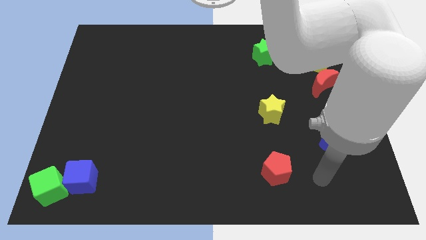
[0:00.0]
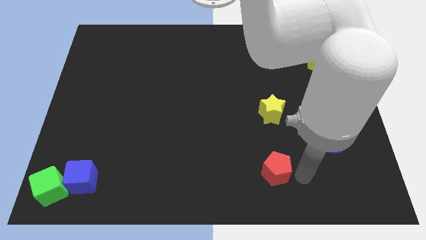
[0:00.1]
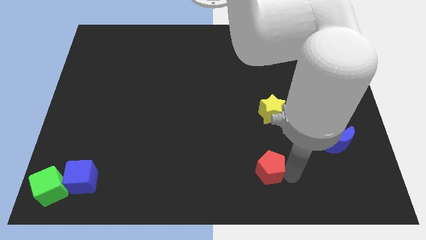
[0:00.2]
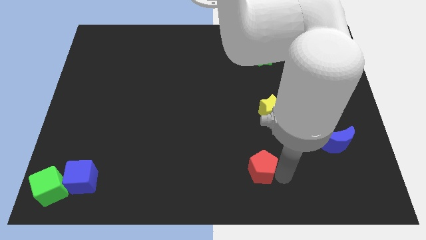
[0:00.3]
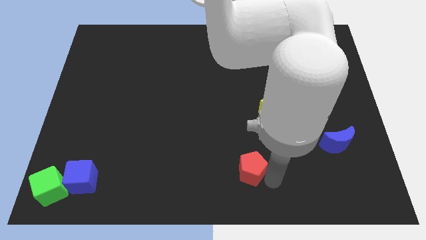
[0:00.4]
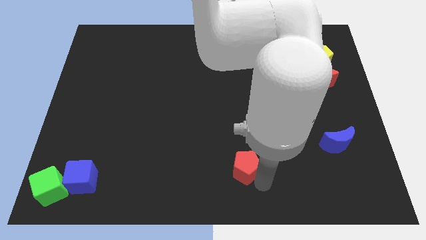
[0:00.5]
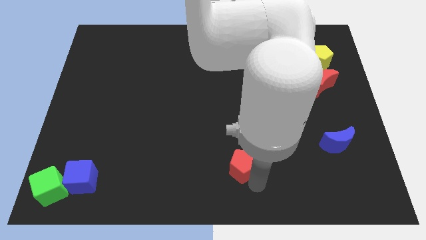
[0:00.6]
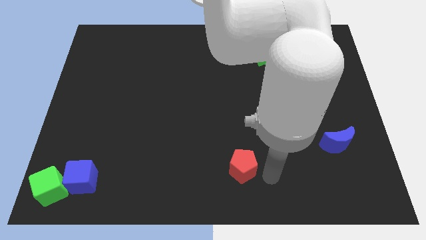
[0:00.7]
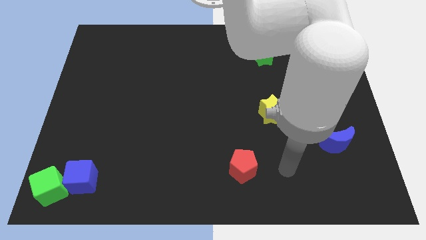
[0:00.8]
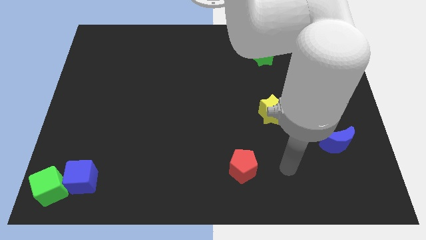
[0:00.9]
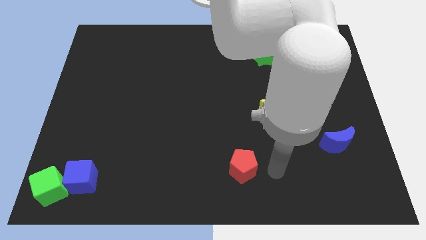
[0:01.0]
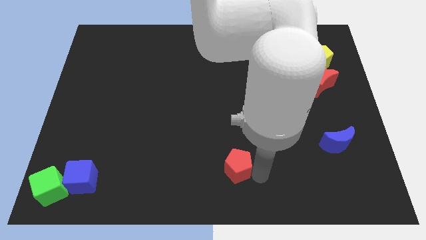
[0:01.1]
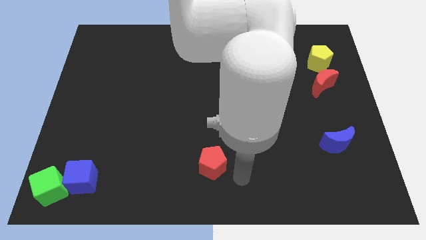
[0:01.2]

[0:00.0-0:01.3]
move the red pentagon diagonally to the yellow star

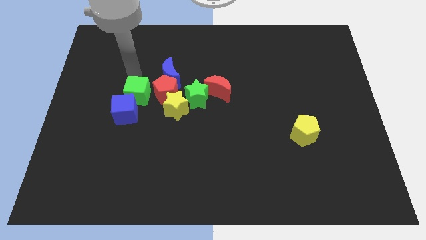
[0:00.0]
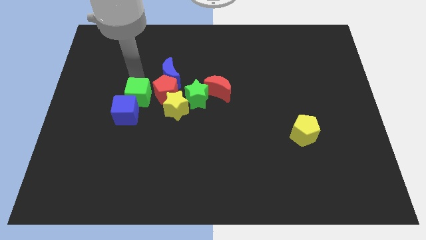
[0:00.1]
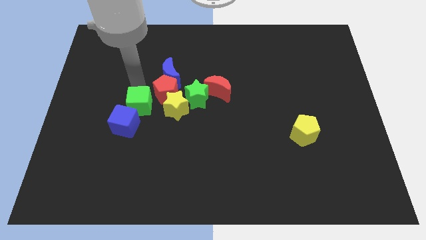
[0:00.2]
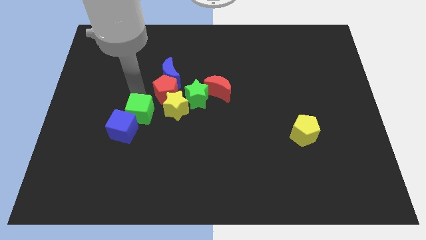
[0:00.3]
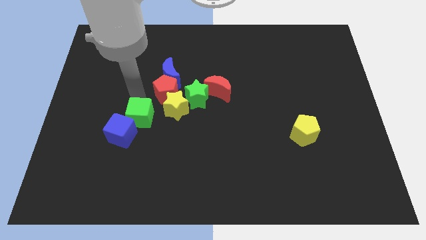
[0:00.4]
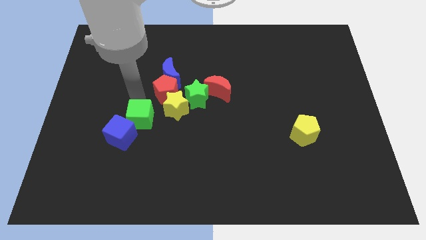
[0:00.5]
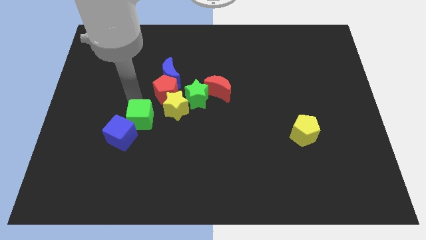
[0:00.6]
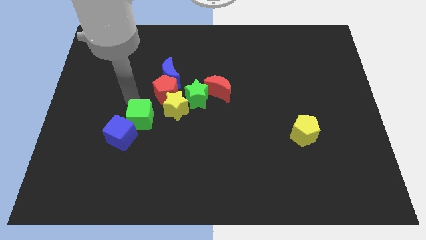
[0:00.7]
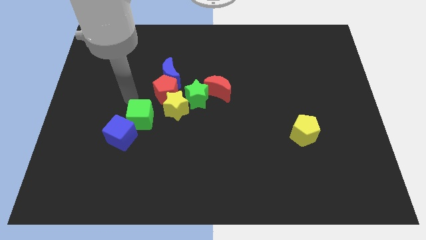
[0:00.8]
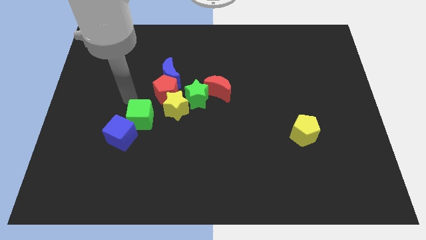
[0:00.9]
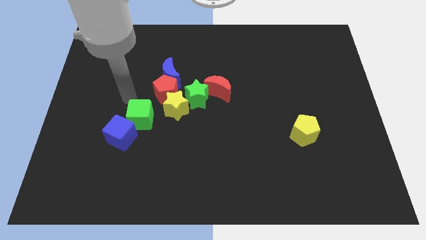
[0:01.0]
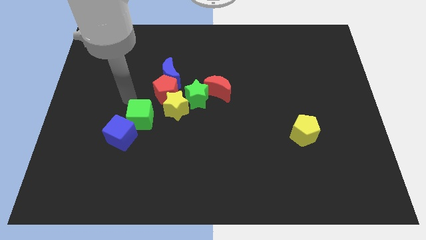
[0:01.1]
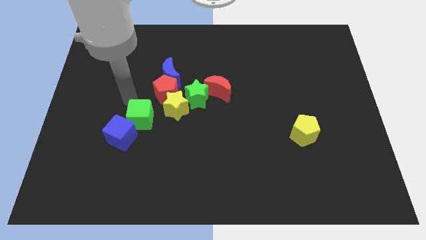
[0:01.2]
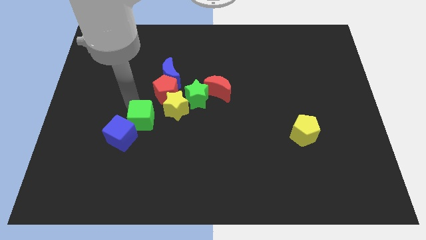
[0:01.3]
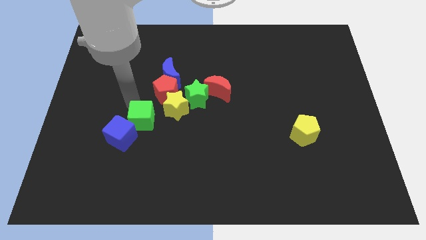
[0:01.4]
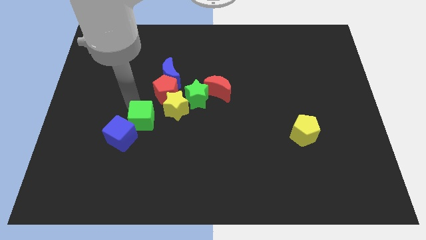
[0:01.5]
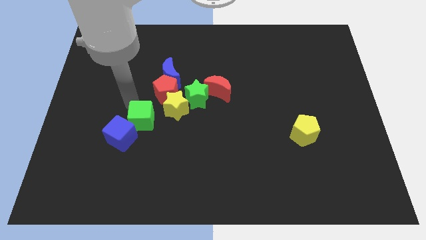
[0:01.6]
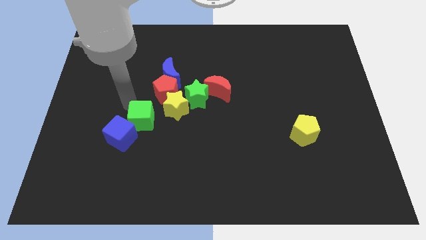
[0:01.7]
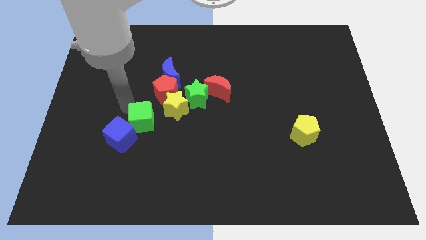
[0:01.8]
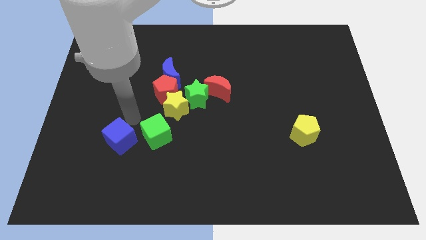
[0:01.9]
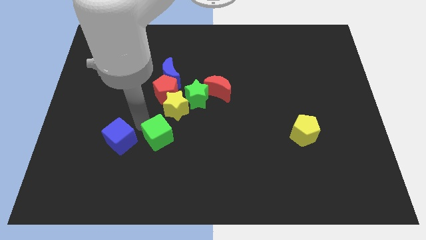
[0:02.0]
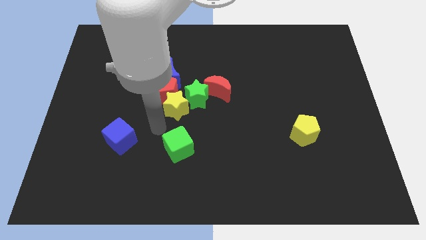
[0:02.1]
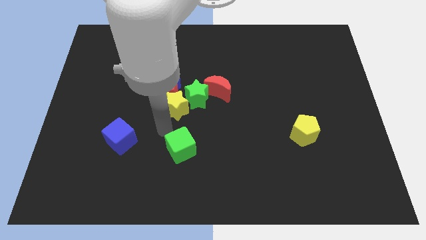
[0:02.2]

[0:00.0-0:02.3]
push the green cube towards the bottom of the board

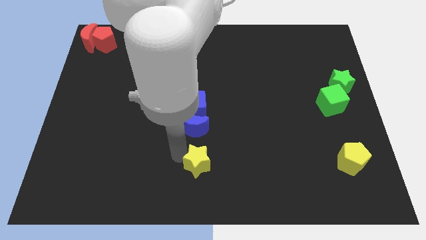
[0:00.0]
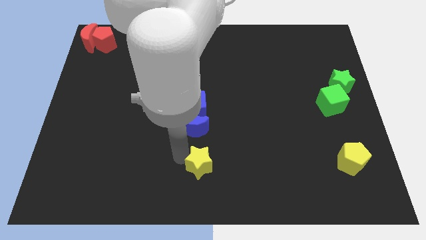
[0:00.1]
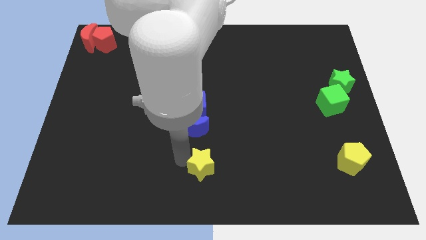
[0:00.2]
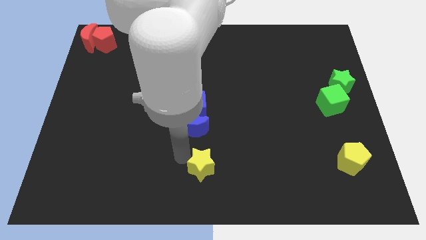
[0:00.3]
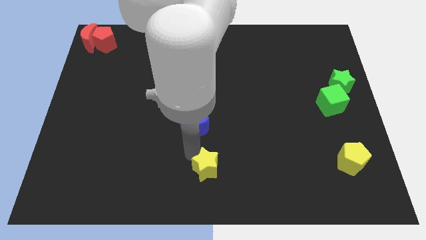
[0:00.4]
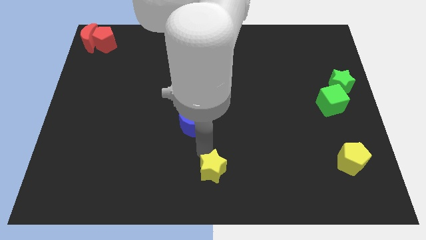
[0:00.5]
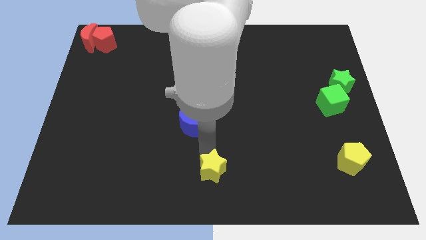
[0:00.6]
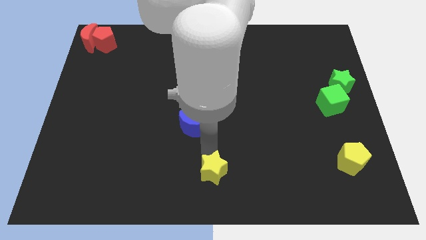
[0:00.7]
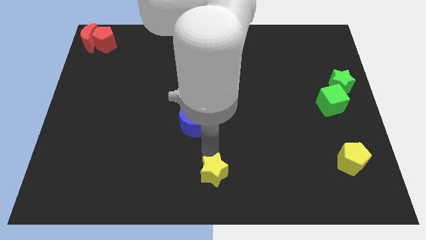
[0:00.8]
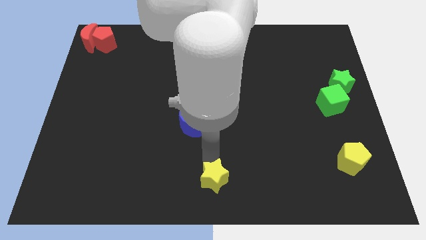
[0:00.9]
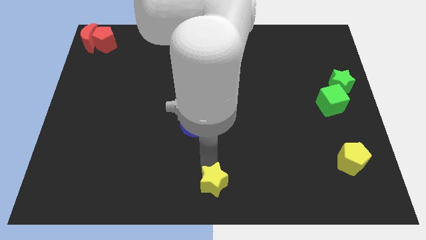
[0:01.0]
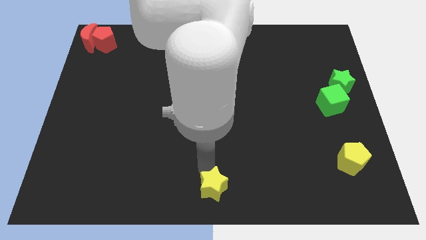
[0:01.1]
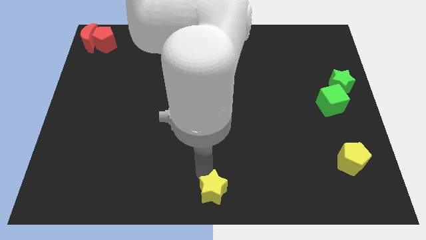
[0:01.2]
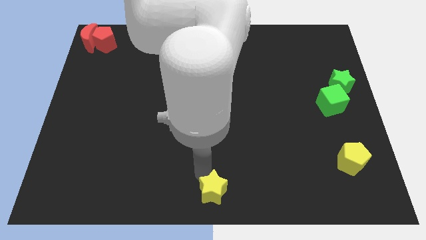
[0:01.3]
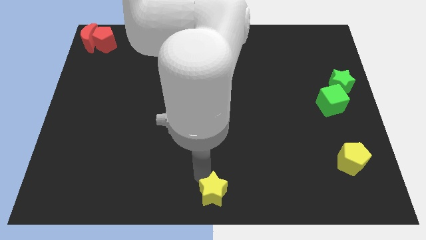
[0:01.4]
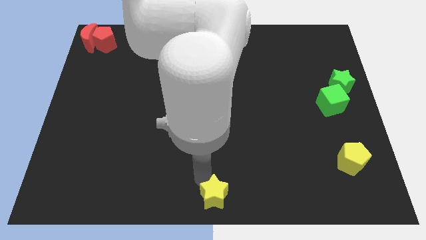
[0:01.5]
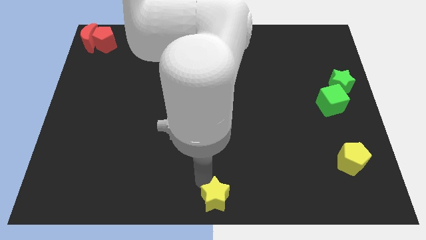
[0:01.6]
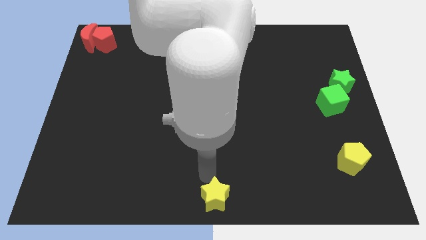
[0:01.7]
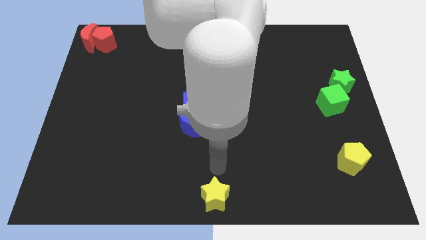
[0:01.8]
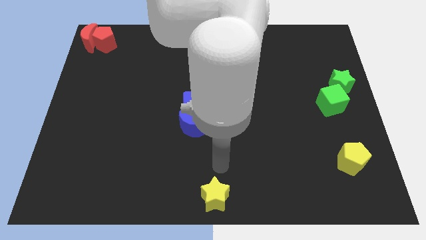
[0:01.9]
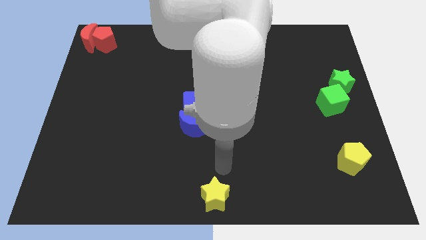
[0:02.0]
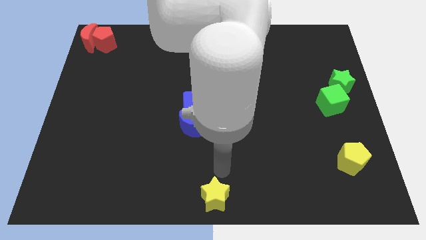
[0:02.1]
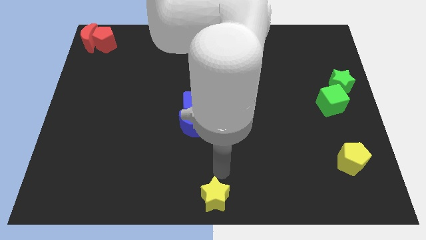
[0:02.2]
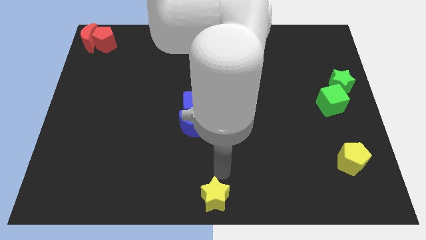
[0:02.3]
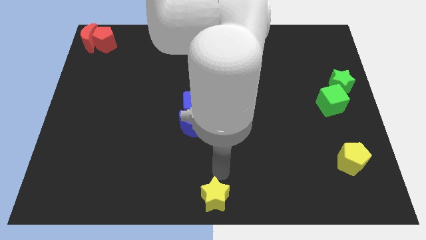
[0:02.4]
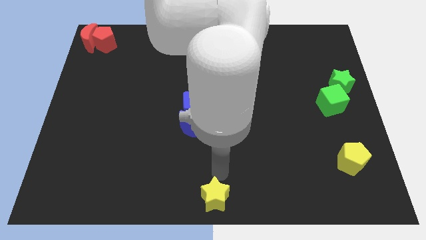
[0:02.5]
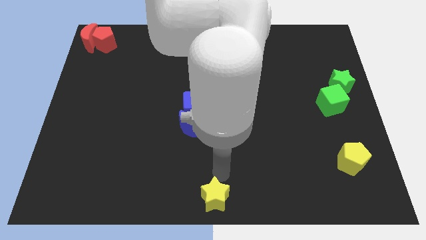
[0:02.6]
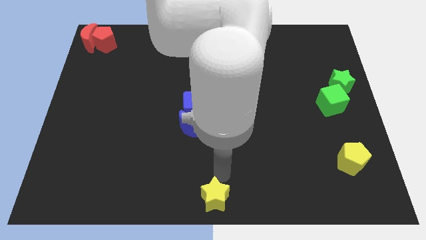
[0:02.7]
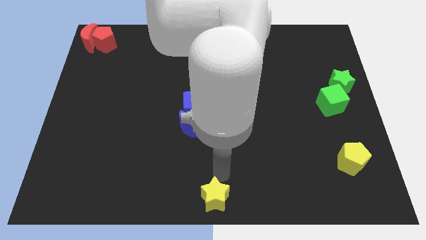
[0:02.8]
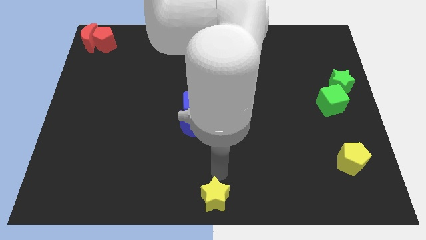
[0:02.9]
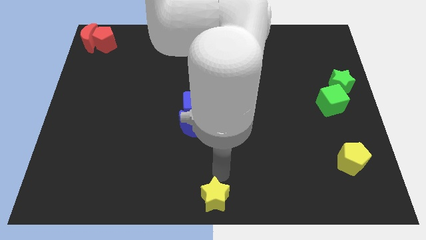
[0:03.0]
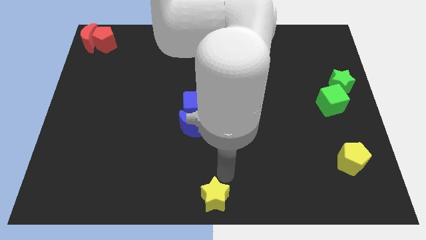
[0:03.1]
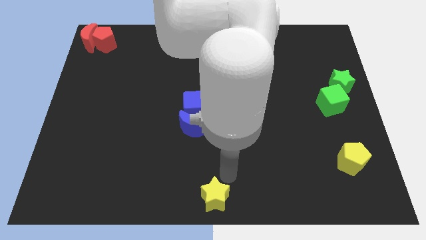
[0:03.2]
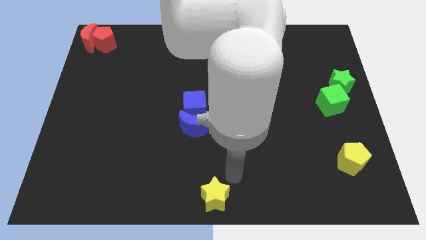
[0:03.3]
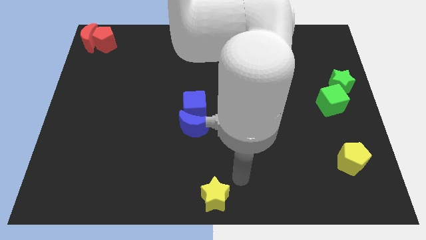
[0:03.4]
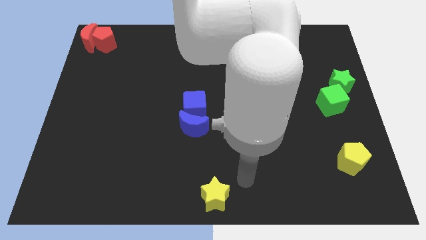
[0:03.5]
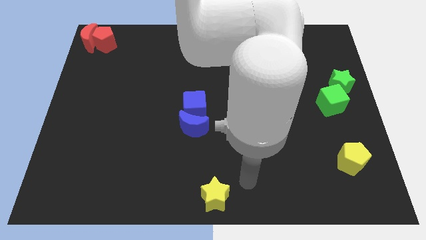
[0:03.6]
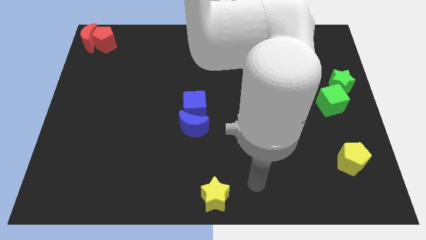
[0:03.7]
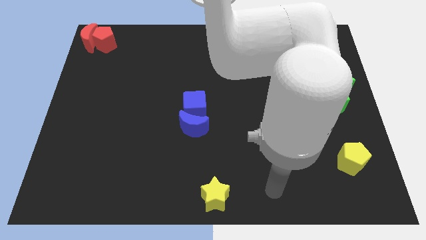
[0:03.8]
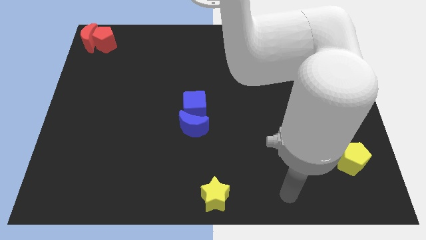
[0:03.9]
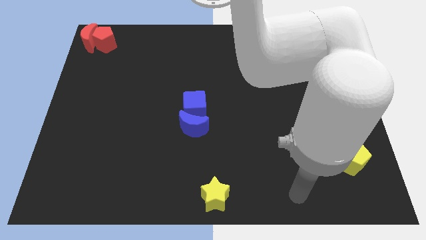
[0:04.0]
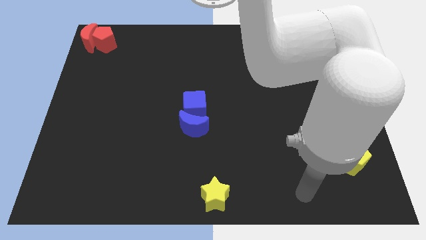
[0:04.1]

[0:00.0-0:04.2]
place the yellow star at the bottom center of the board

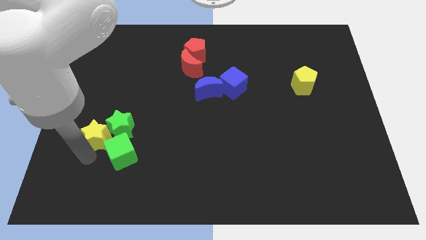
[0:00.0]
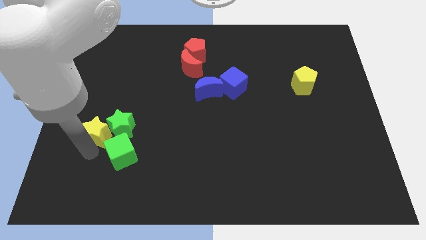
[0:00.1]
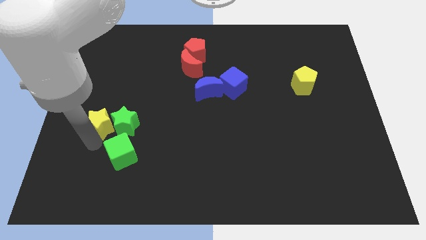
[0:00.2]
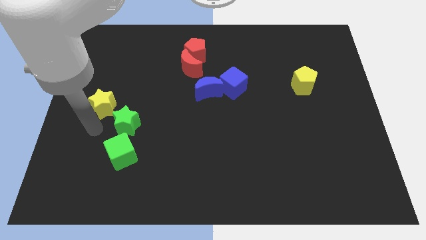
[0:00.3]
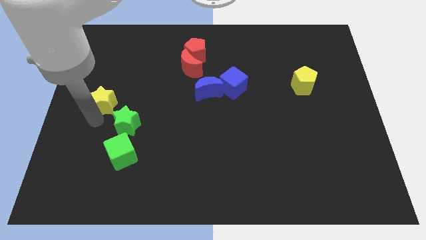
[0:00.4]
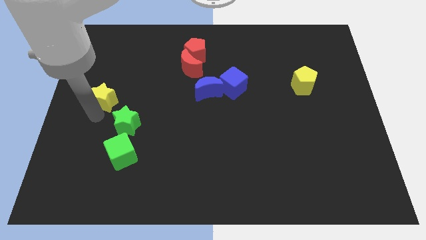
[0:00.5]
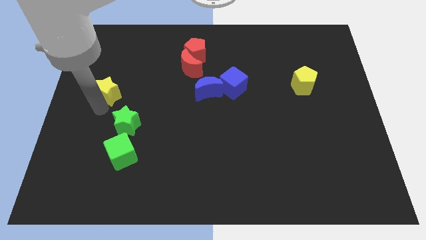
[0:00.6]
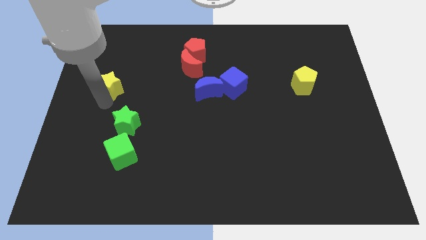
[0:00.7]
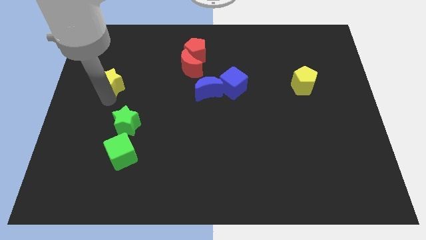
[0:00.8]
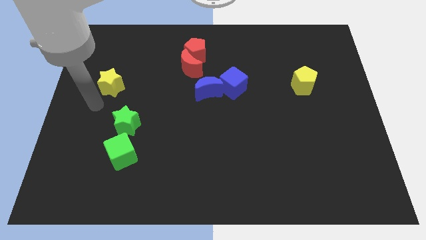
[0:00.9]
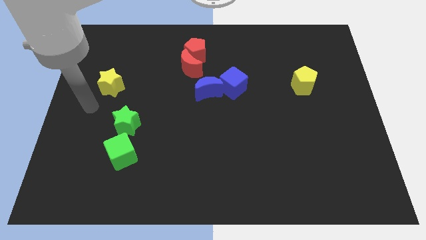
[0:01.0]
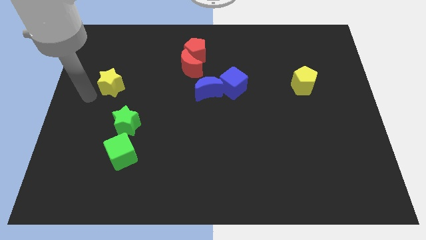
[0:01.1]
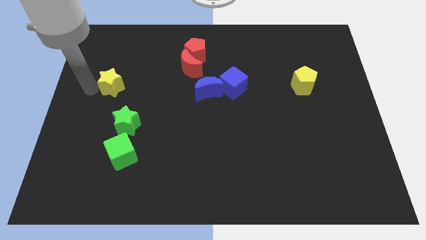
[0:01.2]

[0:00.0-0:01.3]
separate the yellow star and green star
